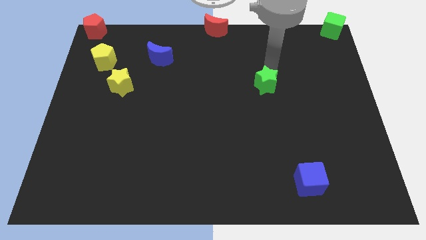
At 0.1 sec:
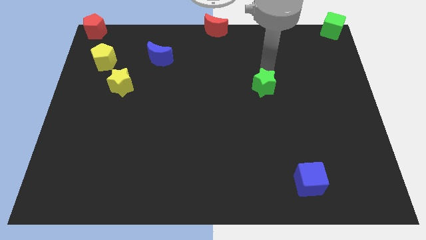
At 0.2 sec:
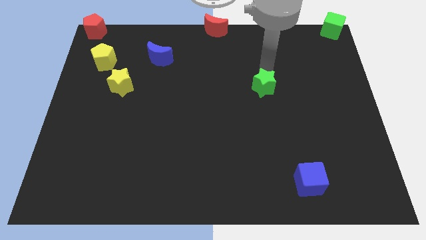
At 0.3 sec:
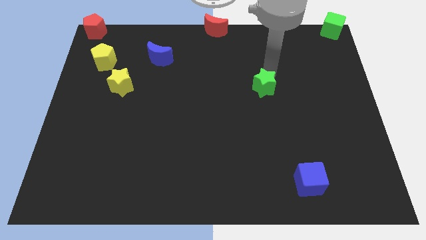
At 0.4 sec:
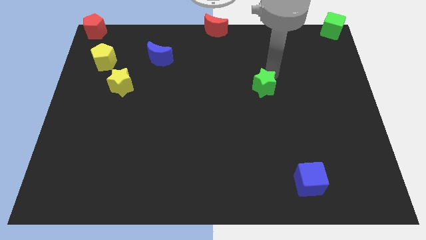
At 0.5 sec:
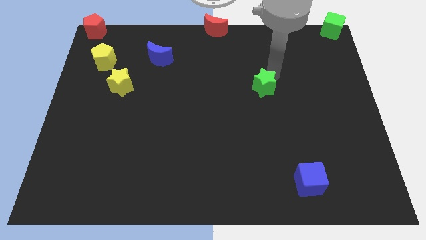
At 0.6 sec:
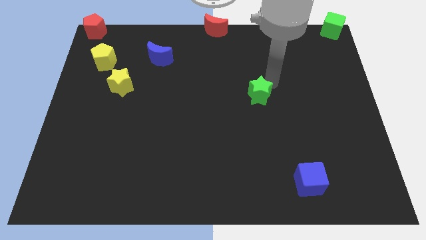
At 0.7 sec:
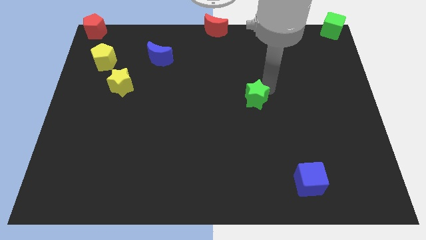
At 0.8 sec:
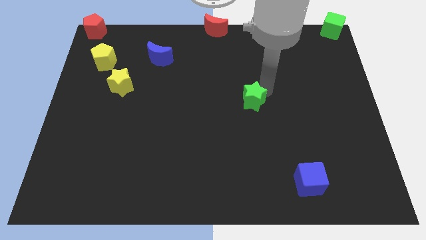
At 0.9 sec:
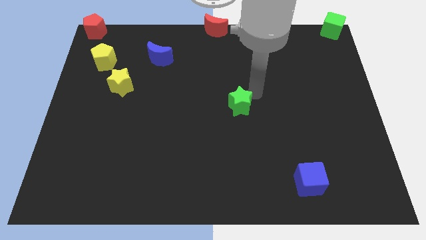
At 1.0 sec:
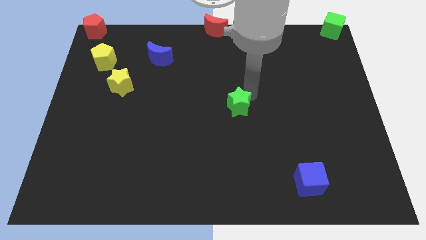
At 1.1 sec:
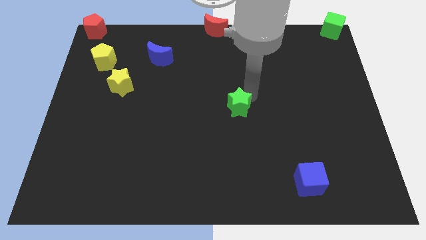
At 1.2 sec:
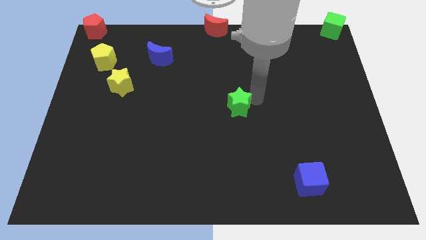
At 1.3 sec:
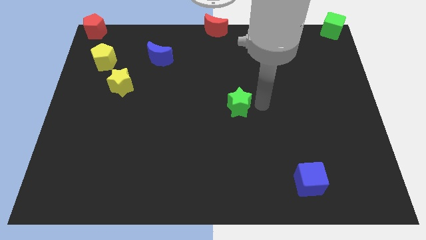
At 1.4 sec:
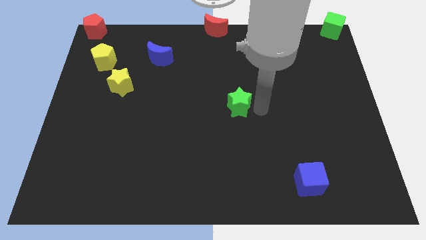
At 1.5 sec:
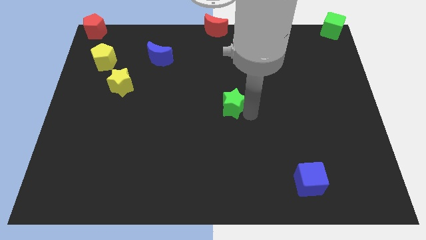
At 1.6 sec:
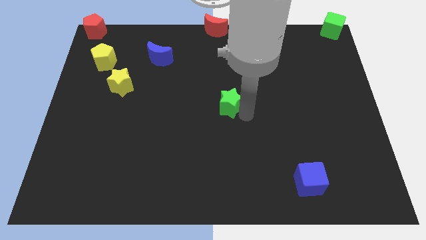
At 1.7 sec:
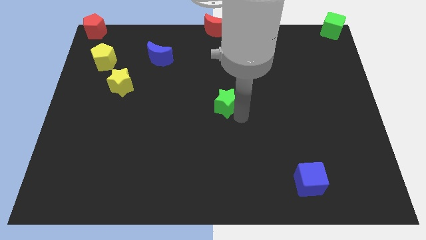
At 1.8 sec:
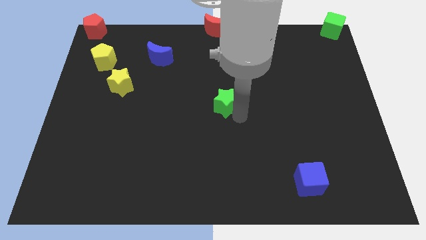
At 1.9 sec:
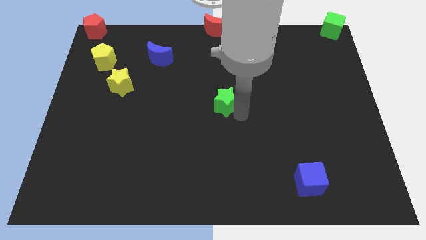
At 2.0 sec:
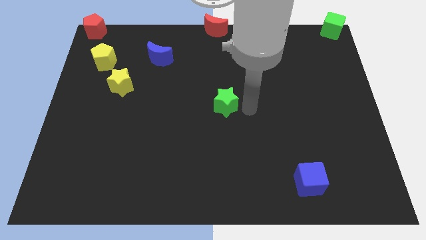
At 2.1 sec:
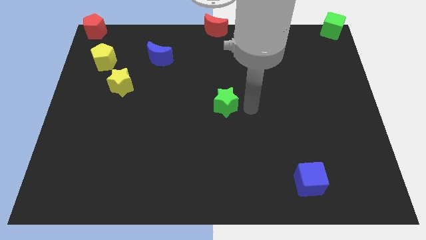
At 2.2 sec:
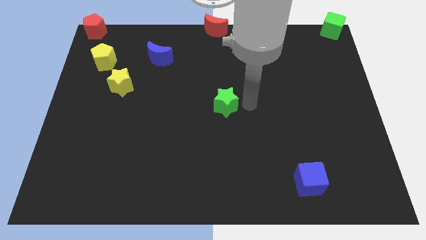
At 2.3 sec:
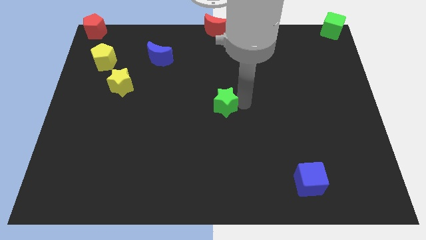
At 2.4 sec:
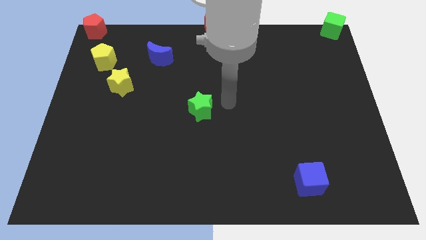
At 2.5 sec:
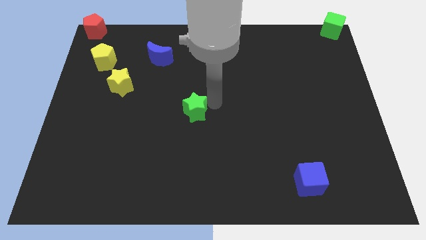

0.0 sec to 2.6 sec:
place the green star at the center of the board

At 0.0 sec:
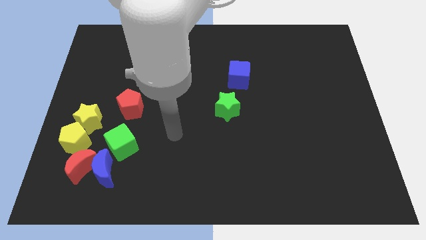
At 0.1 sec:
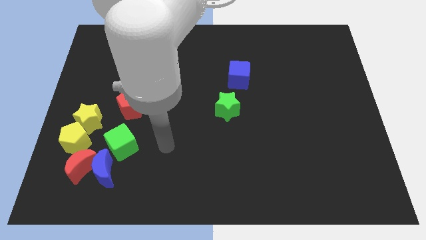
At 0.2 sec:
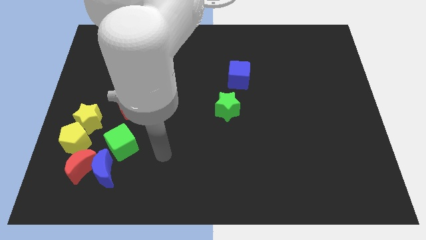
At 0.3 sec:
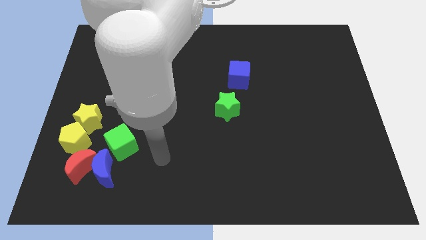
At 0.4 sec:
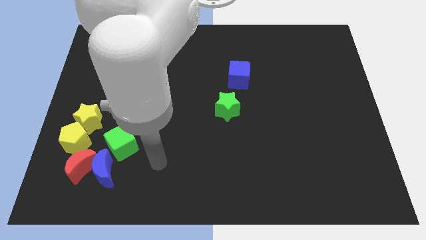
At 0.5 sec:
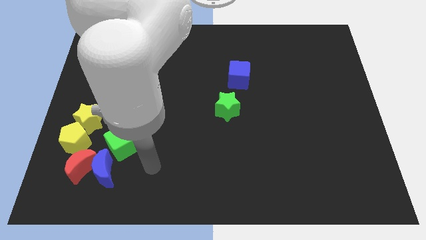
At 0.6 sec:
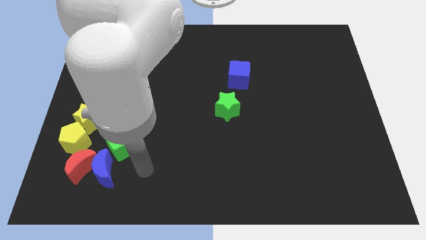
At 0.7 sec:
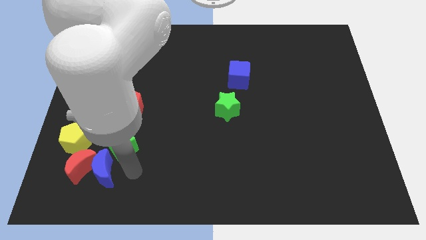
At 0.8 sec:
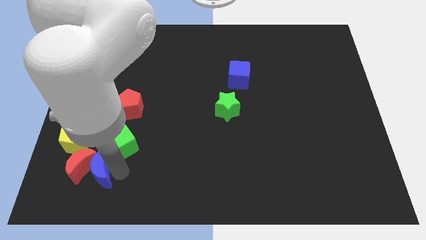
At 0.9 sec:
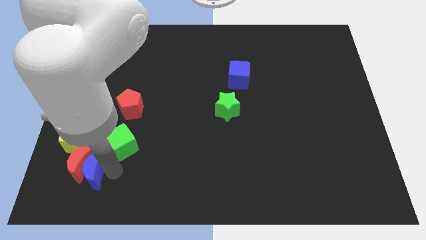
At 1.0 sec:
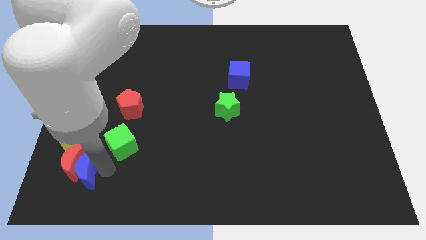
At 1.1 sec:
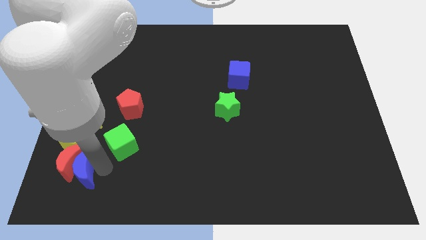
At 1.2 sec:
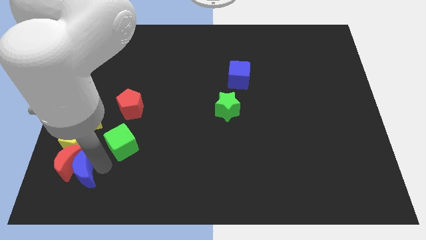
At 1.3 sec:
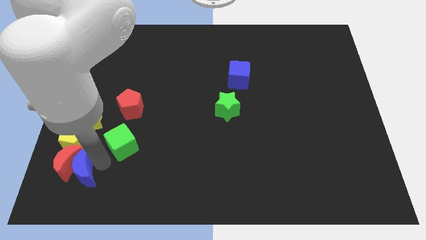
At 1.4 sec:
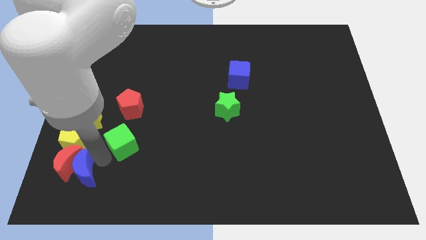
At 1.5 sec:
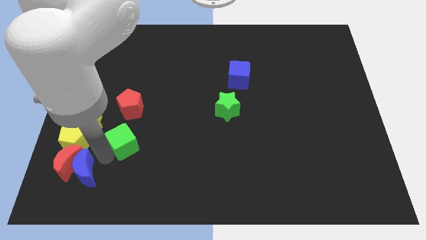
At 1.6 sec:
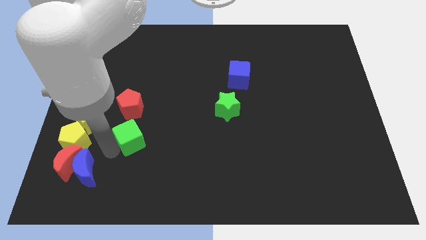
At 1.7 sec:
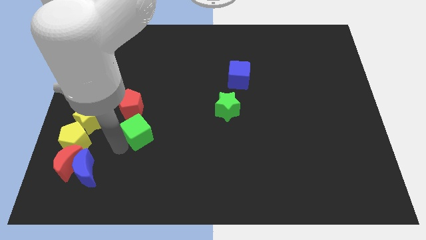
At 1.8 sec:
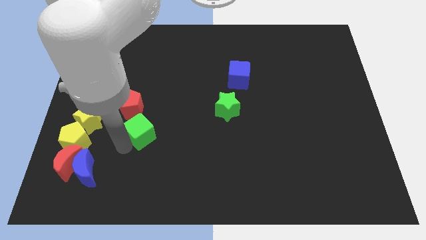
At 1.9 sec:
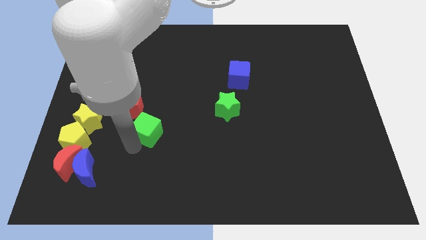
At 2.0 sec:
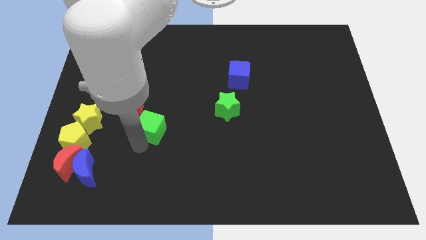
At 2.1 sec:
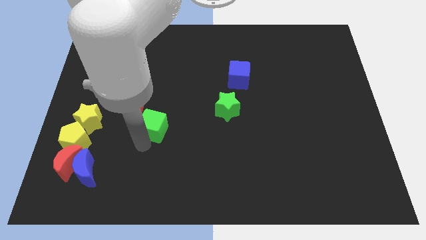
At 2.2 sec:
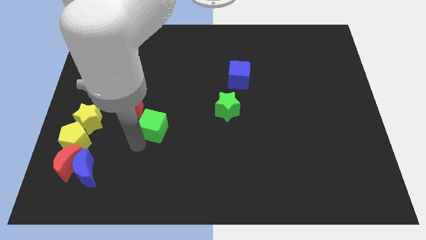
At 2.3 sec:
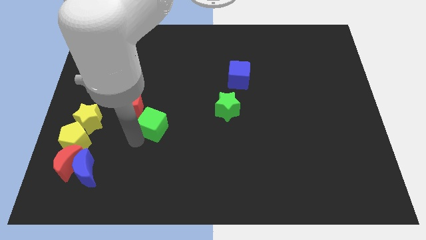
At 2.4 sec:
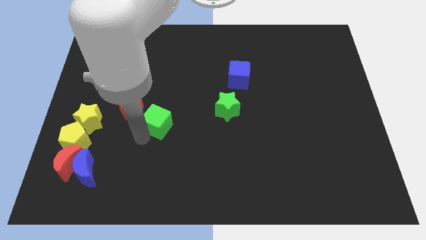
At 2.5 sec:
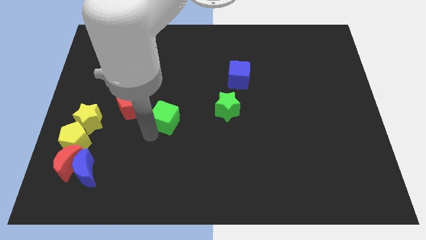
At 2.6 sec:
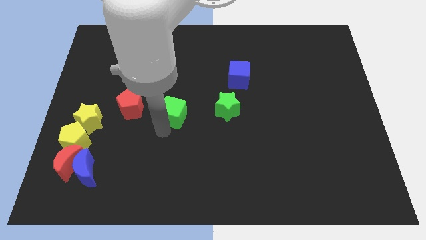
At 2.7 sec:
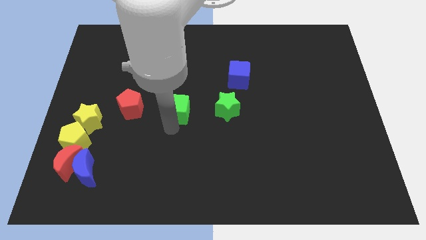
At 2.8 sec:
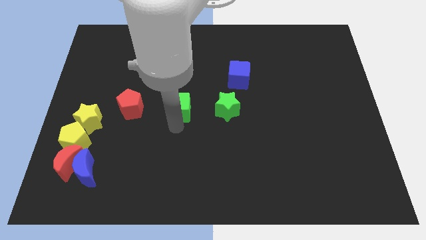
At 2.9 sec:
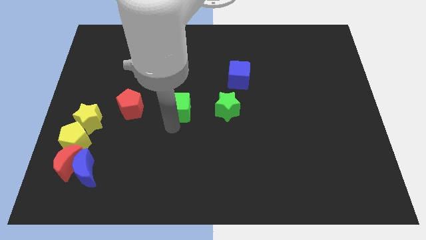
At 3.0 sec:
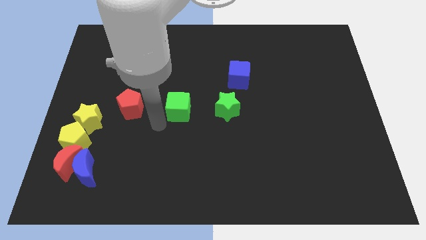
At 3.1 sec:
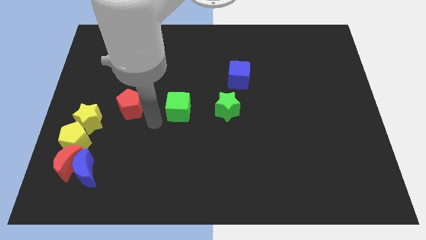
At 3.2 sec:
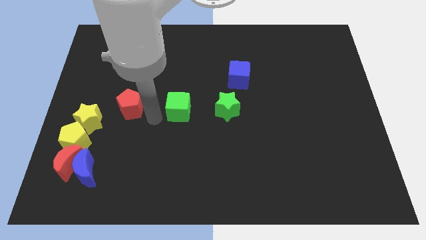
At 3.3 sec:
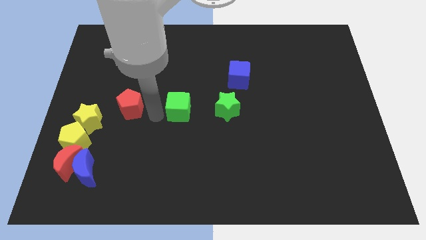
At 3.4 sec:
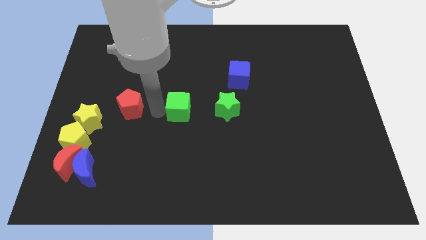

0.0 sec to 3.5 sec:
move the green cube left to the green star

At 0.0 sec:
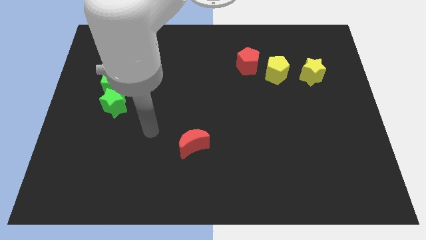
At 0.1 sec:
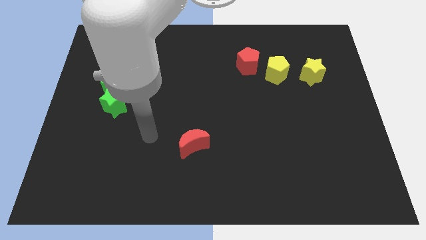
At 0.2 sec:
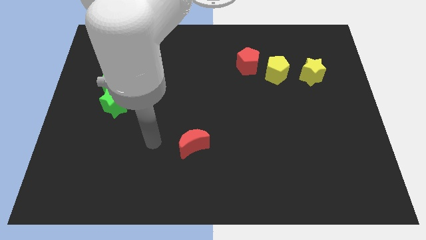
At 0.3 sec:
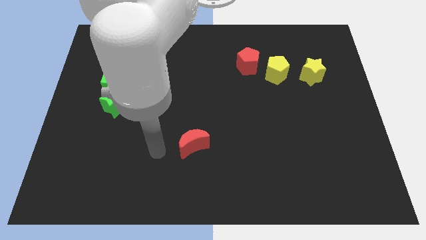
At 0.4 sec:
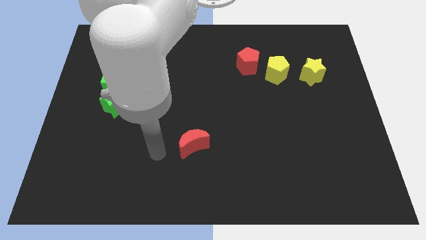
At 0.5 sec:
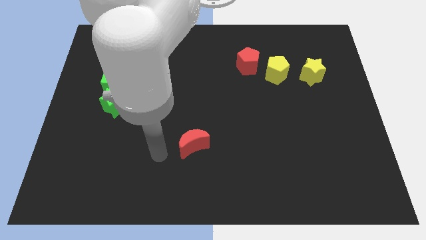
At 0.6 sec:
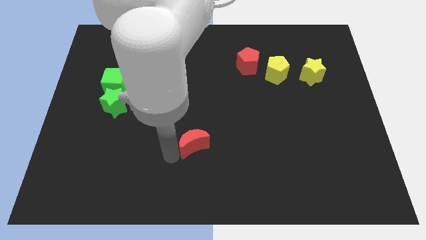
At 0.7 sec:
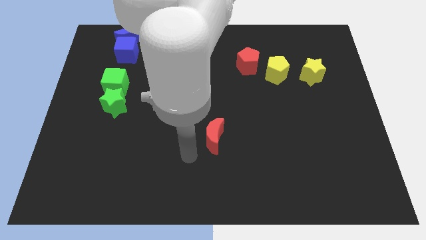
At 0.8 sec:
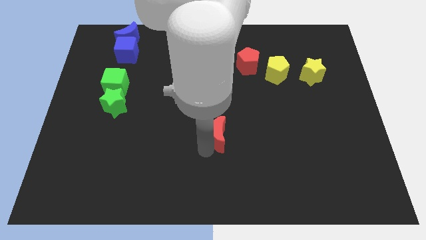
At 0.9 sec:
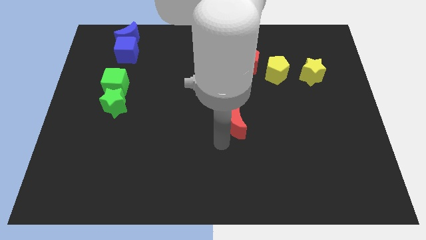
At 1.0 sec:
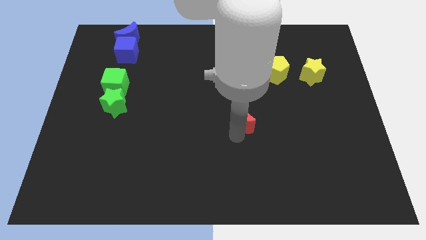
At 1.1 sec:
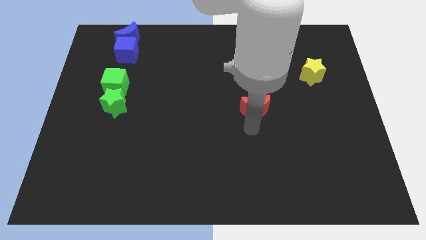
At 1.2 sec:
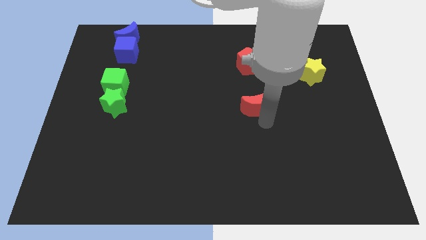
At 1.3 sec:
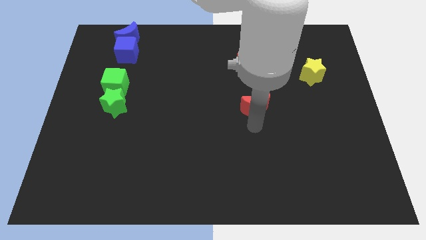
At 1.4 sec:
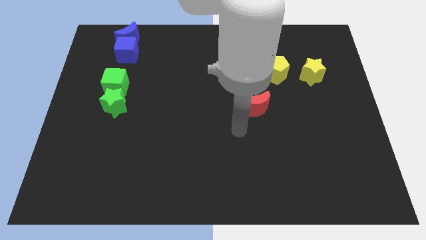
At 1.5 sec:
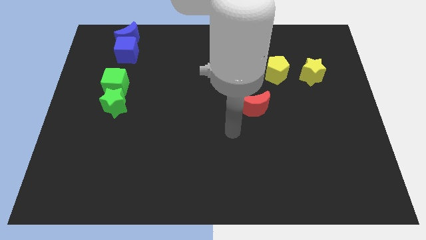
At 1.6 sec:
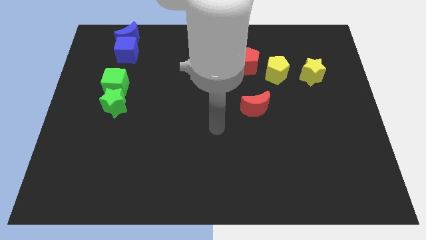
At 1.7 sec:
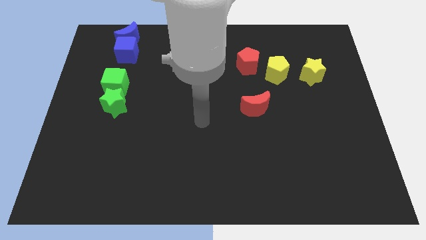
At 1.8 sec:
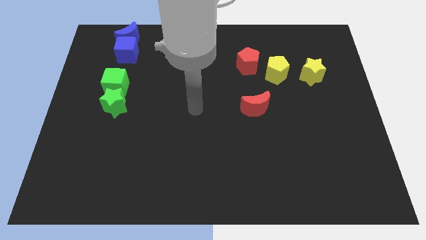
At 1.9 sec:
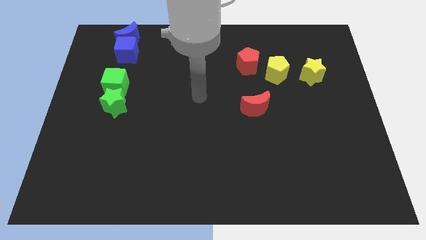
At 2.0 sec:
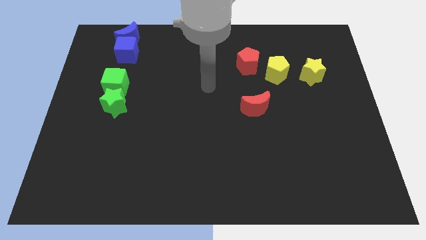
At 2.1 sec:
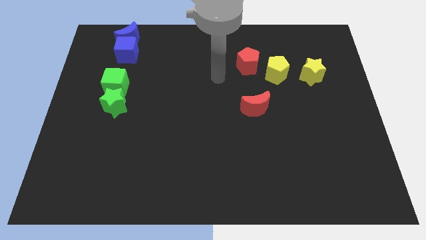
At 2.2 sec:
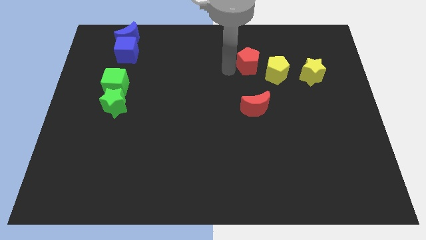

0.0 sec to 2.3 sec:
place the red crescent diagonally to the yellow star

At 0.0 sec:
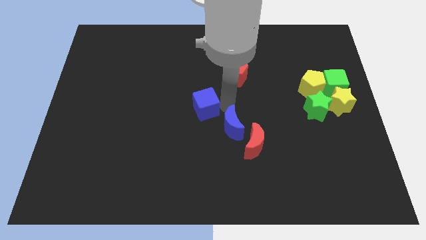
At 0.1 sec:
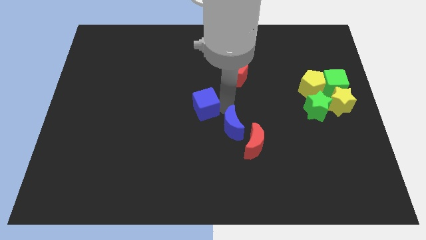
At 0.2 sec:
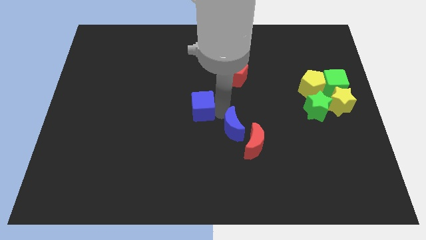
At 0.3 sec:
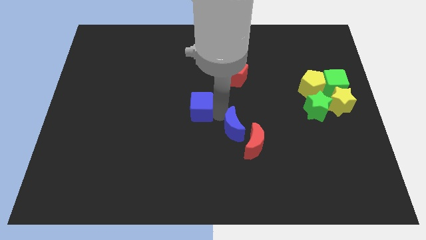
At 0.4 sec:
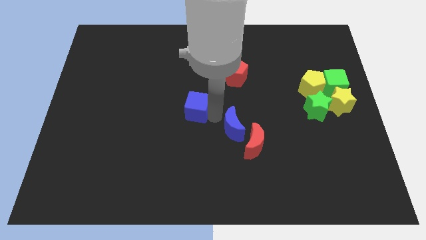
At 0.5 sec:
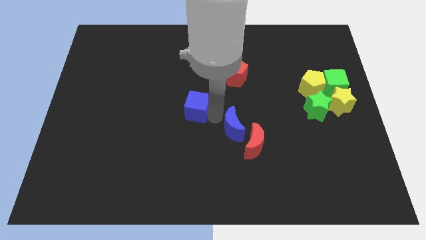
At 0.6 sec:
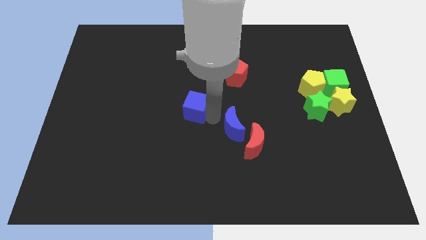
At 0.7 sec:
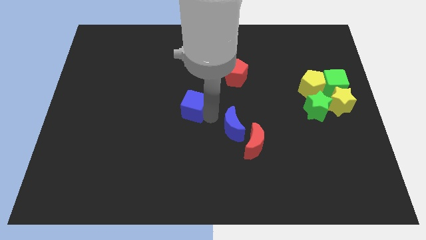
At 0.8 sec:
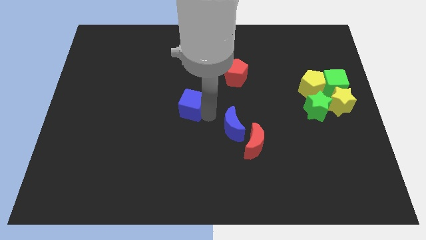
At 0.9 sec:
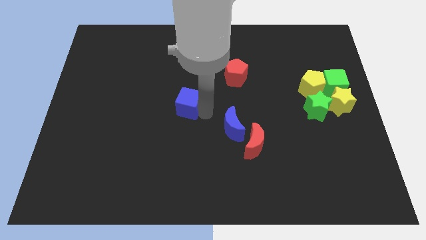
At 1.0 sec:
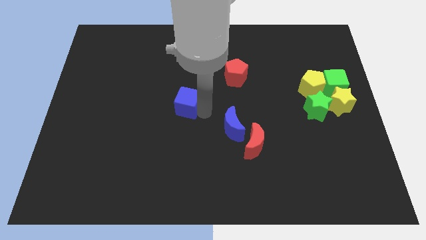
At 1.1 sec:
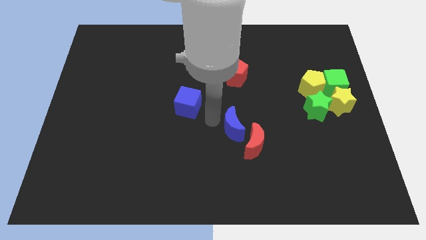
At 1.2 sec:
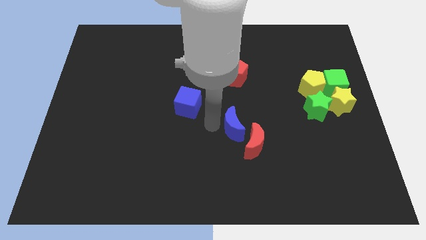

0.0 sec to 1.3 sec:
push the blue cube slightly to the left
